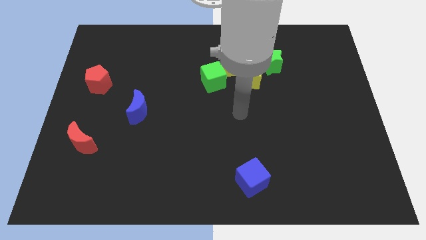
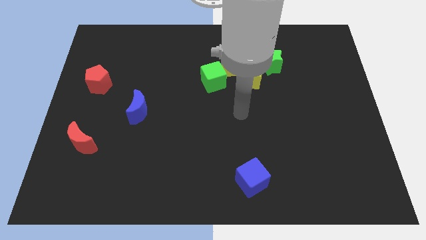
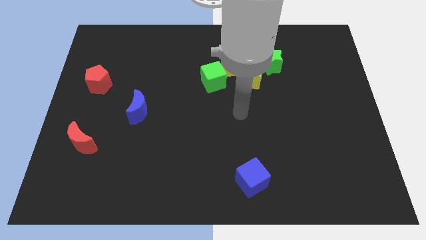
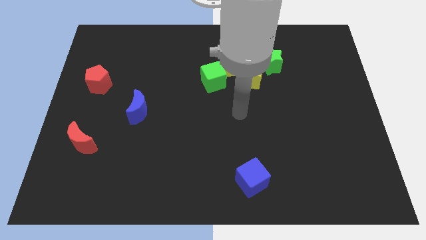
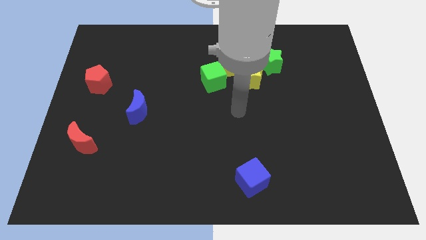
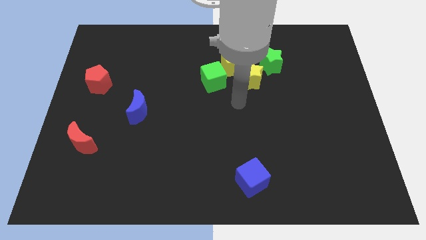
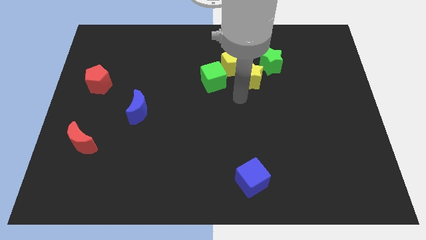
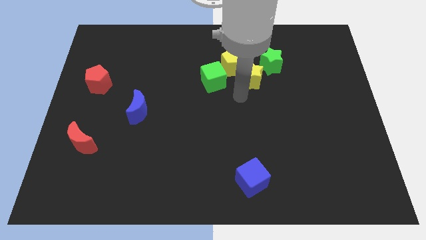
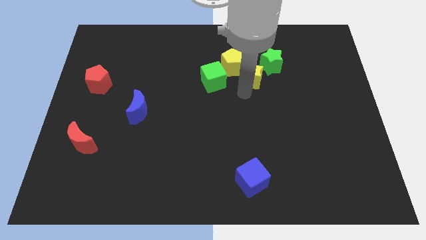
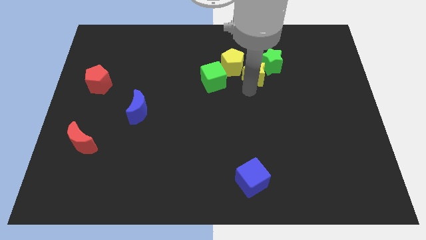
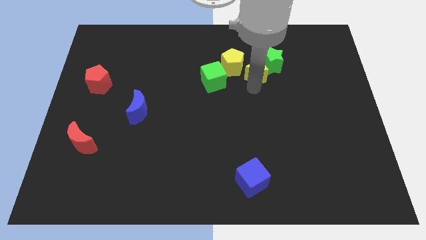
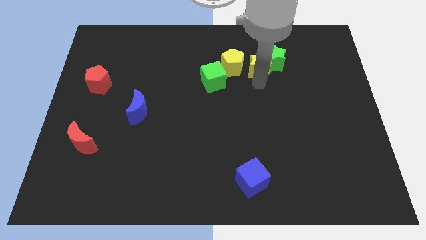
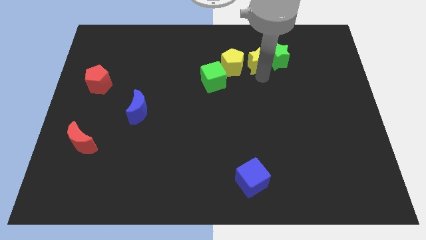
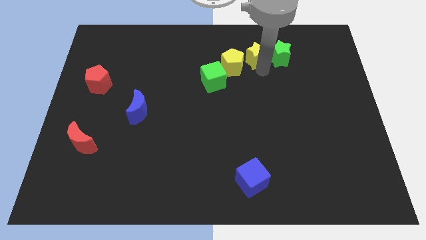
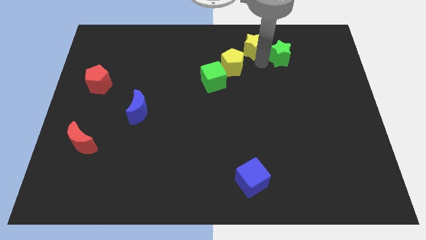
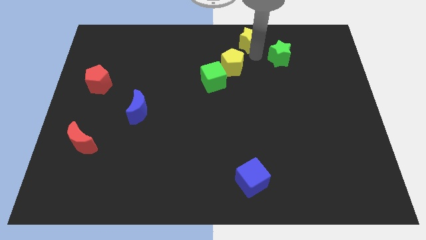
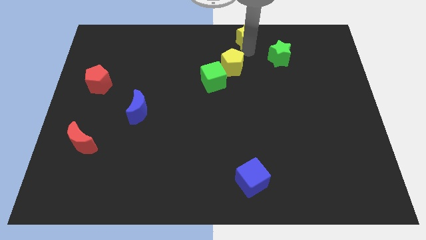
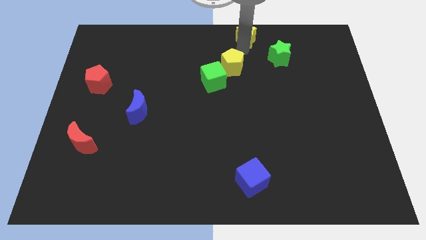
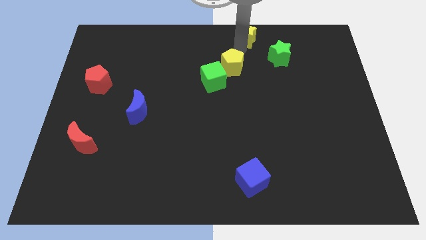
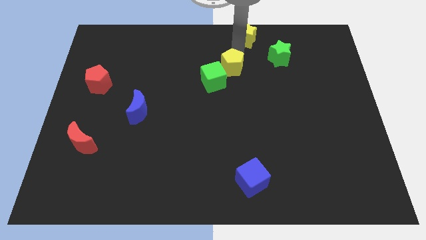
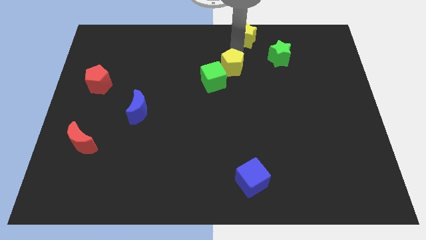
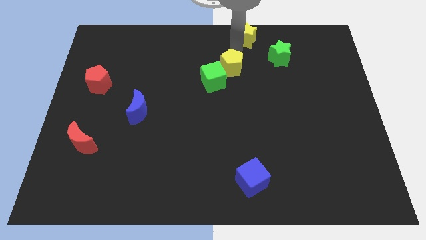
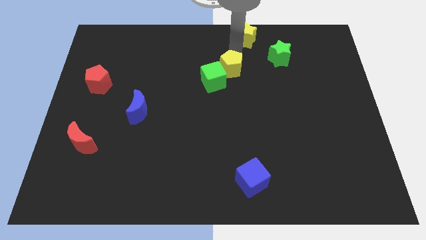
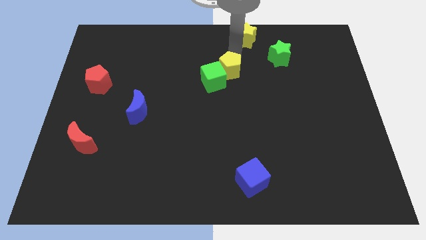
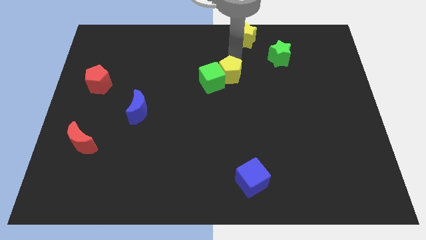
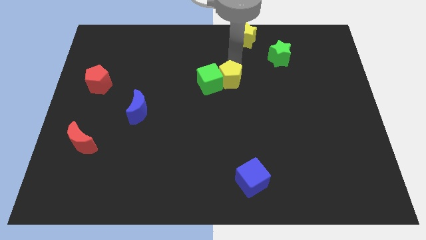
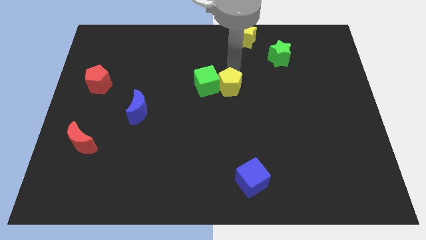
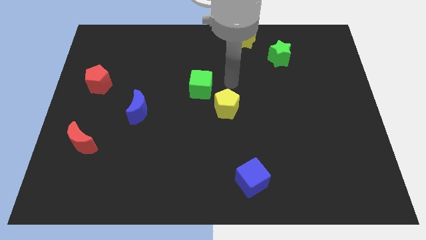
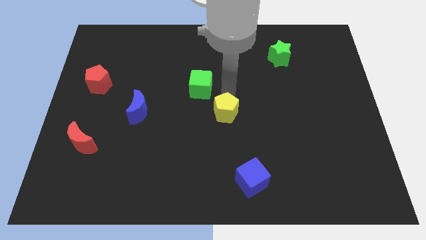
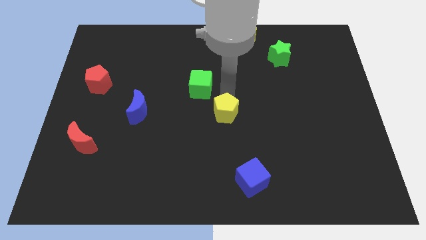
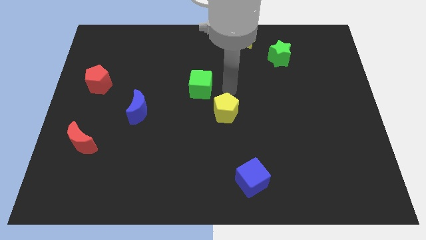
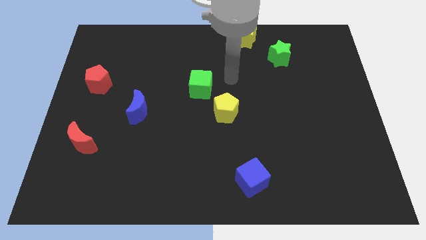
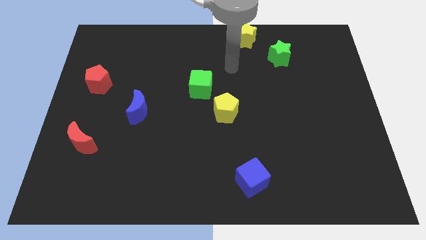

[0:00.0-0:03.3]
move the yellow pentagon away from the green cube

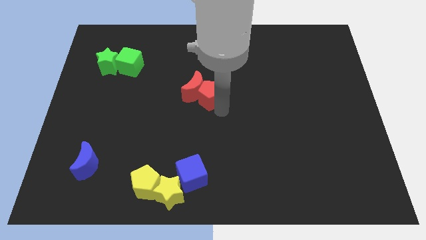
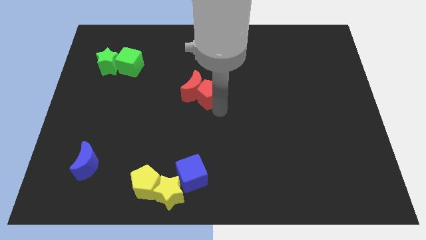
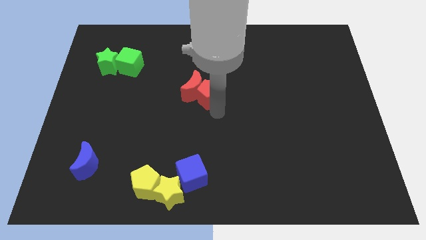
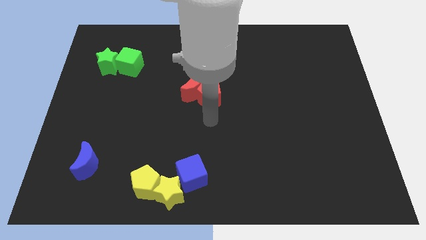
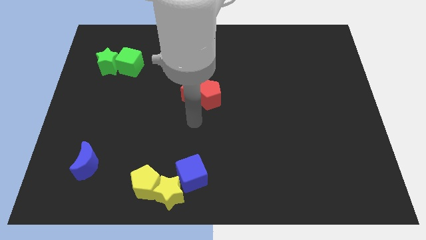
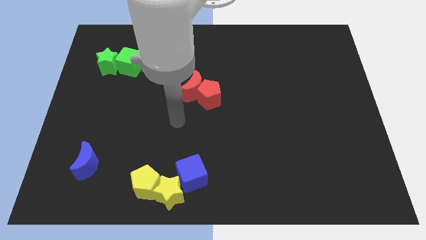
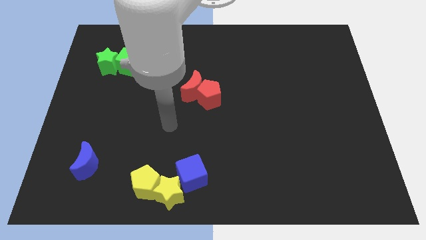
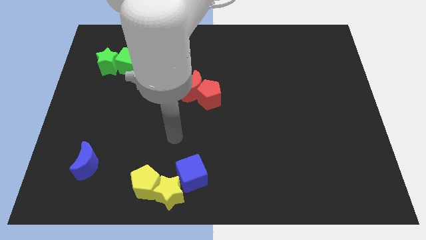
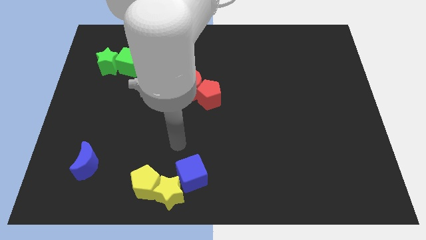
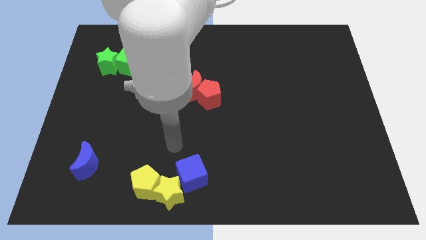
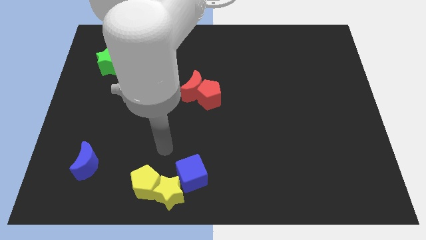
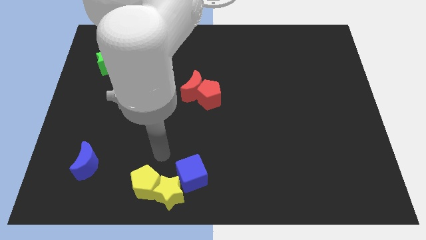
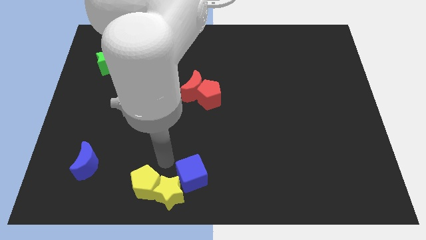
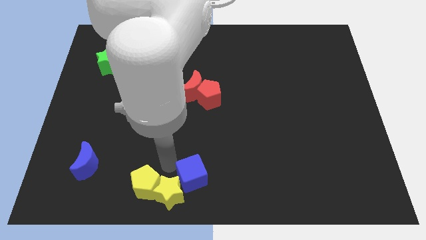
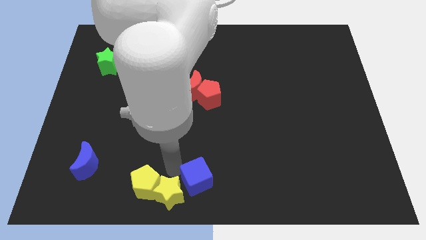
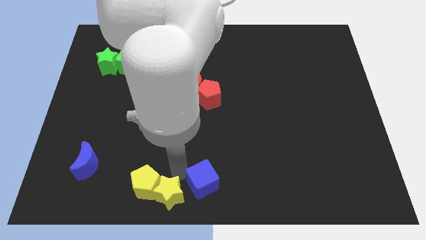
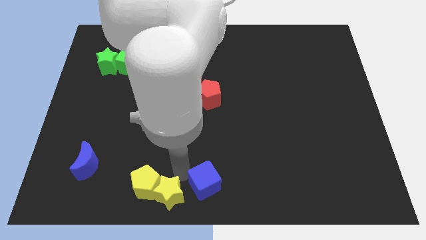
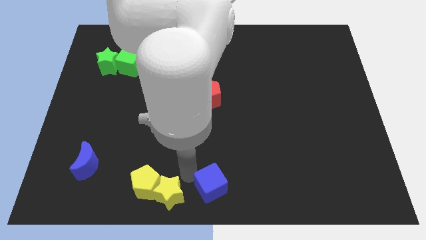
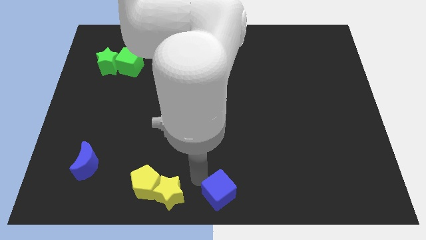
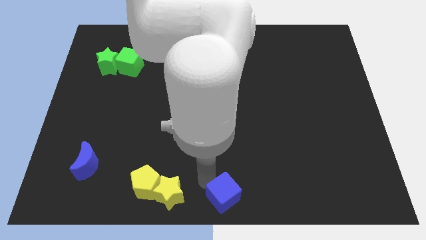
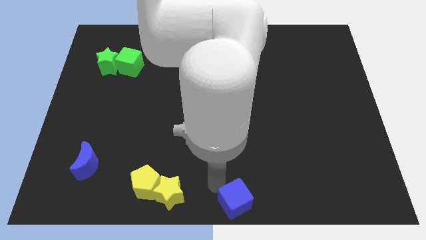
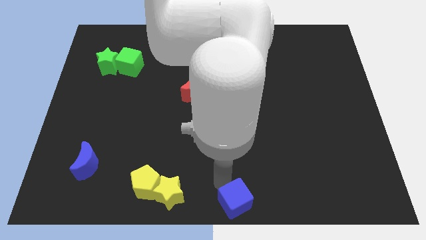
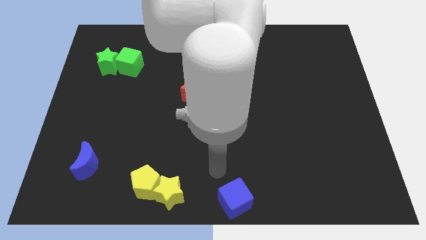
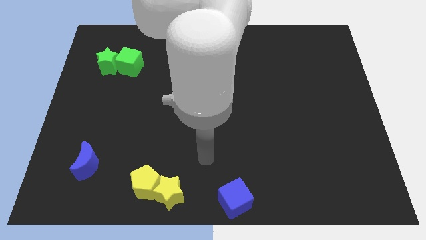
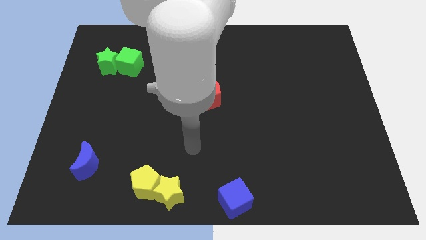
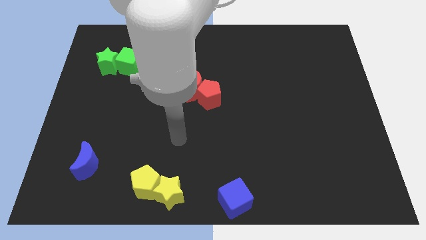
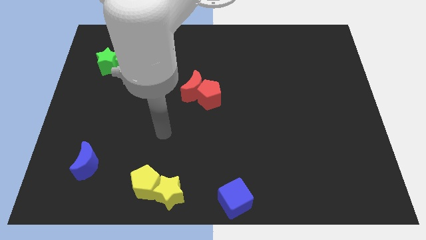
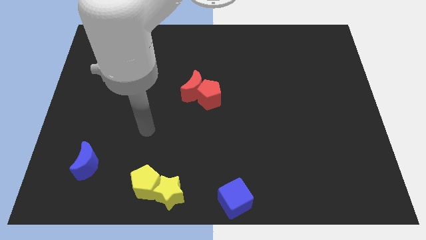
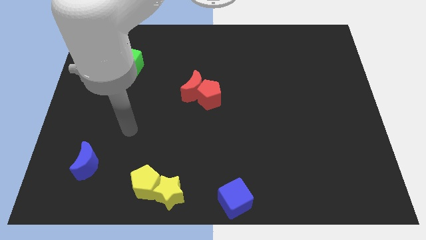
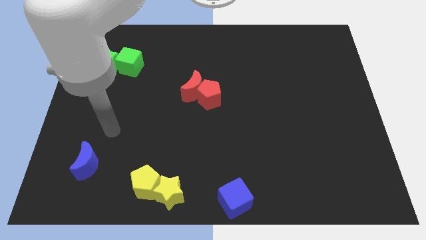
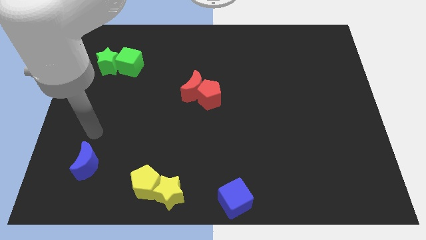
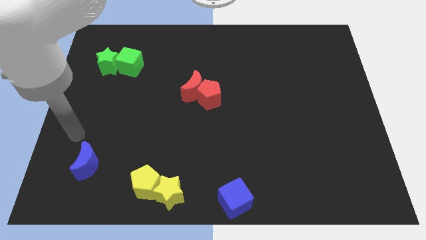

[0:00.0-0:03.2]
push the blue cube towards the bottom center of the board

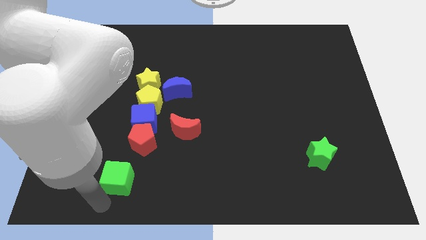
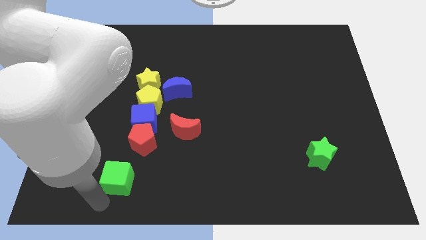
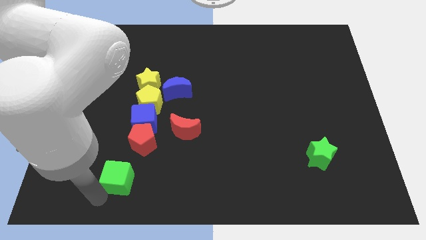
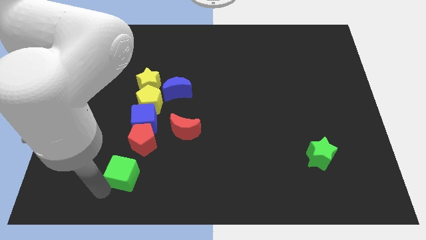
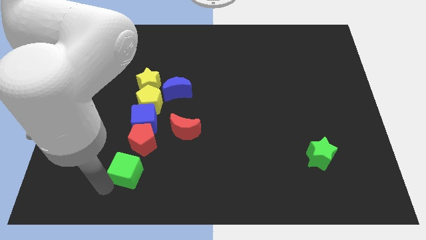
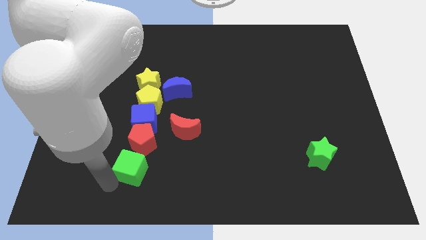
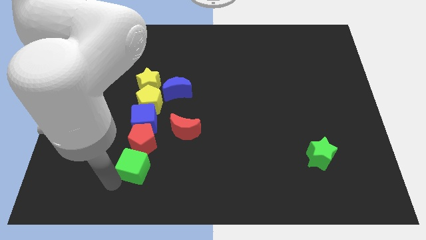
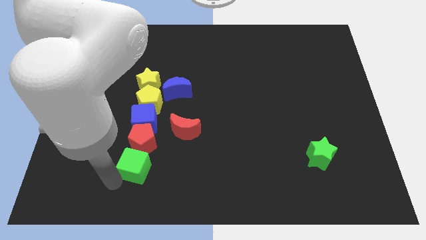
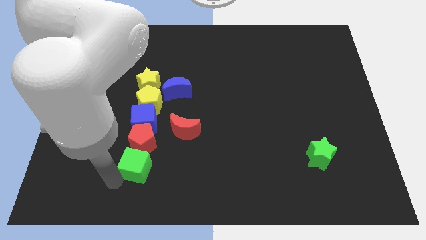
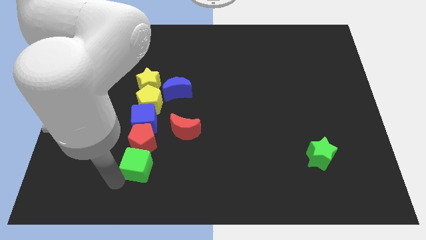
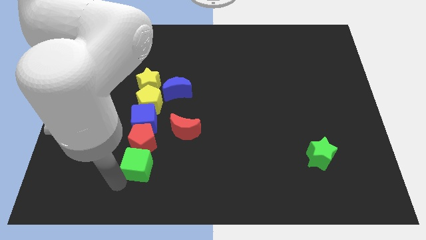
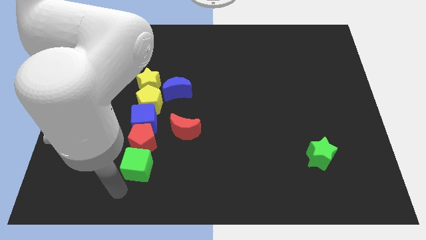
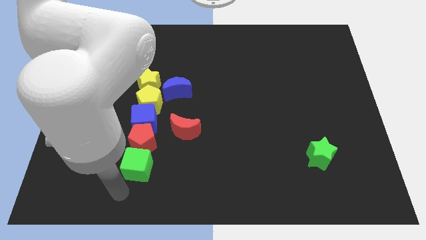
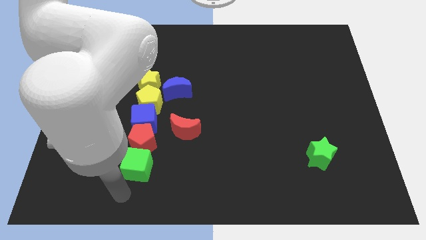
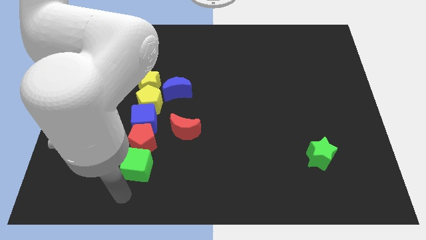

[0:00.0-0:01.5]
place green cube close to red pentagon

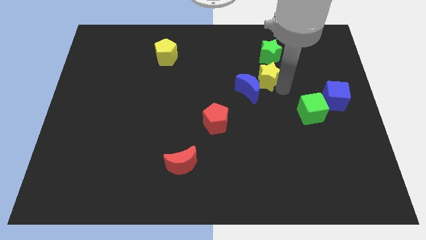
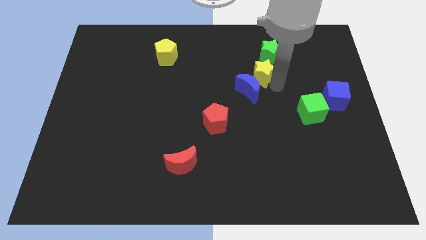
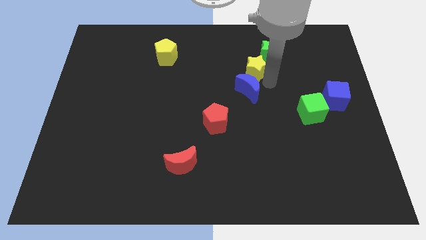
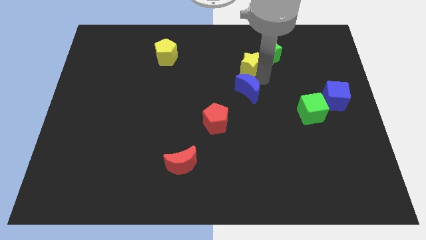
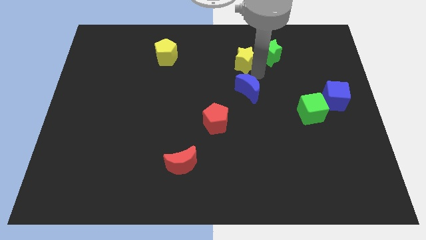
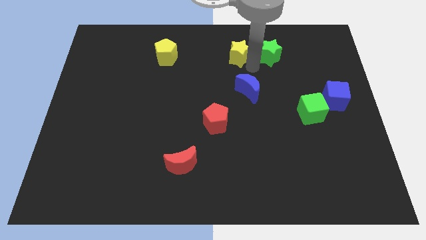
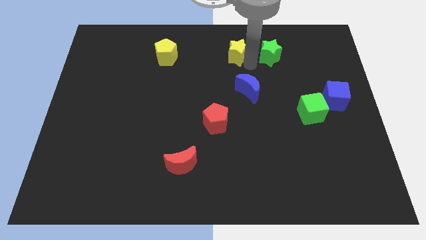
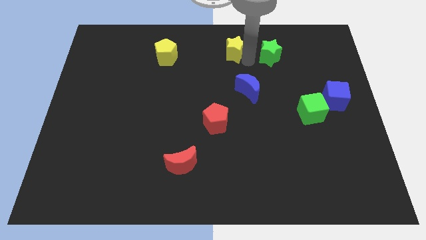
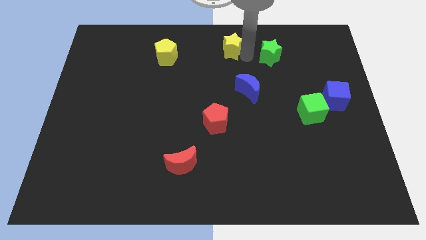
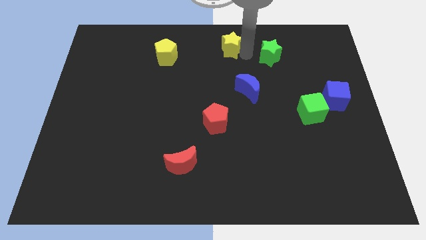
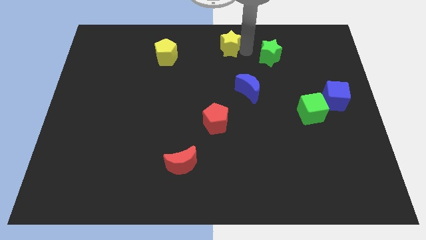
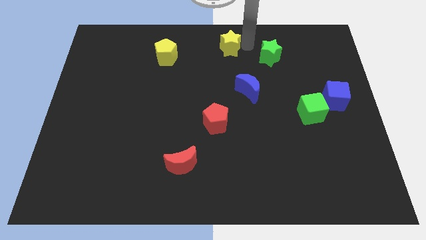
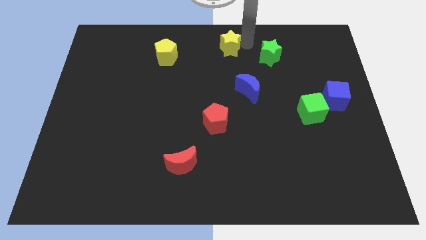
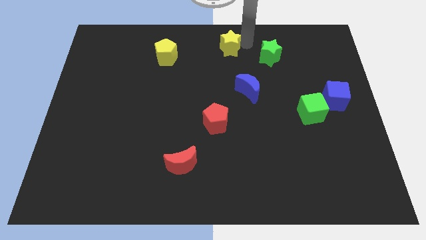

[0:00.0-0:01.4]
place the yellow star at top center of the board
